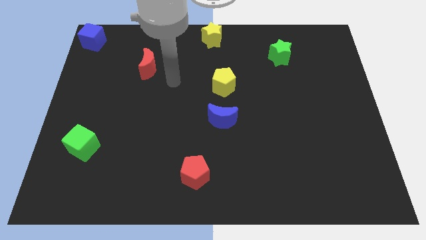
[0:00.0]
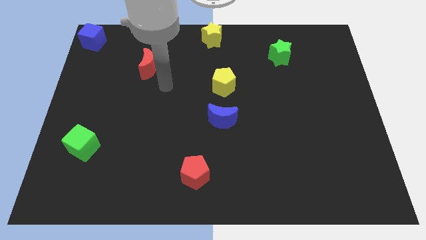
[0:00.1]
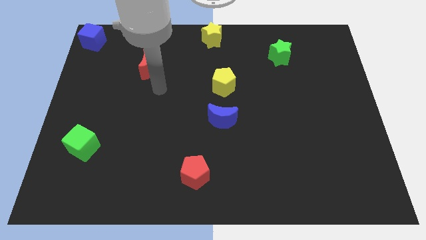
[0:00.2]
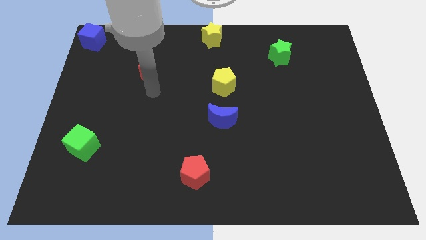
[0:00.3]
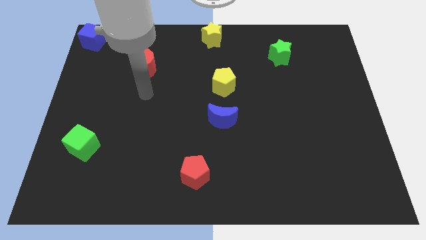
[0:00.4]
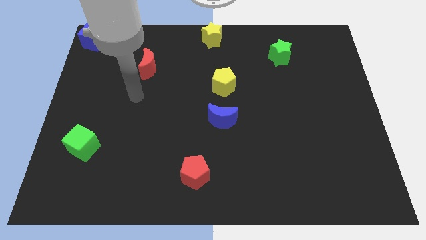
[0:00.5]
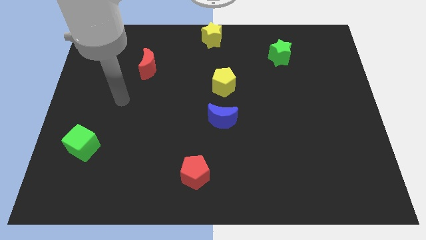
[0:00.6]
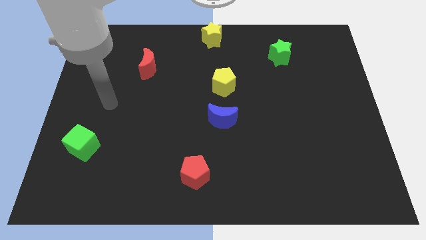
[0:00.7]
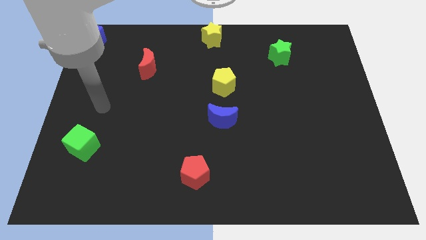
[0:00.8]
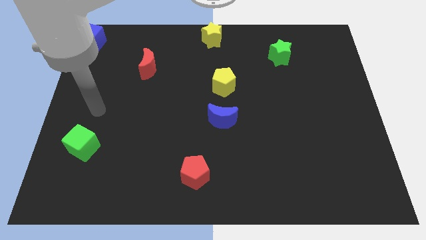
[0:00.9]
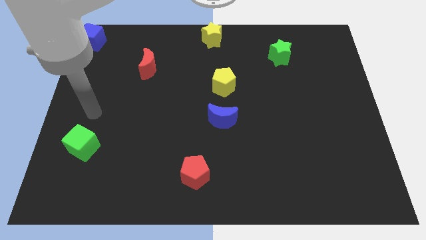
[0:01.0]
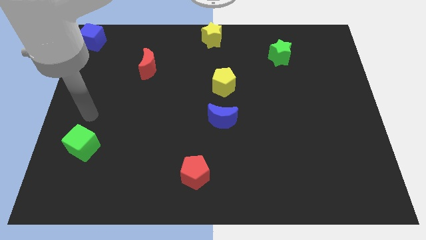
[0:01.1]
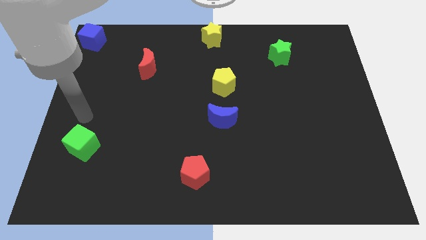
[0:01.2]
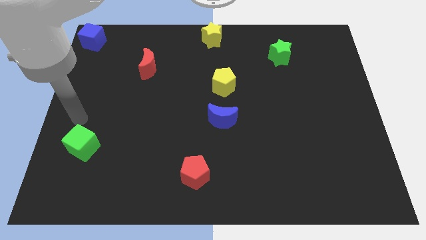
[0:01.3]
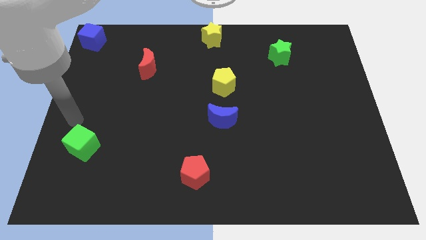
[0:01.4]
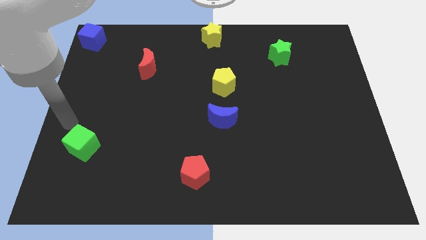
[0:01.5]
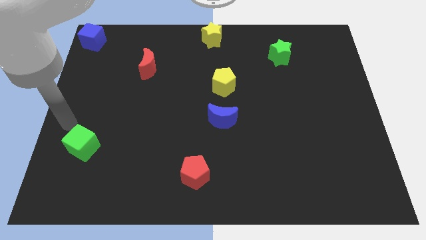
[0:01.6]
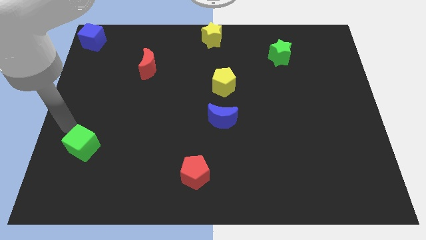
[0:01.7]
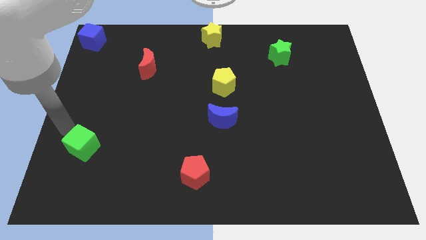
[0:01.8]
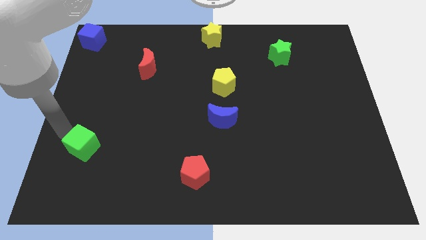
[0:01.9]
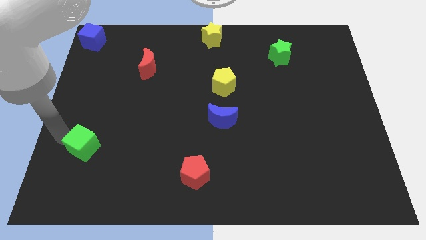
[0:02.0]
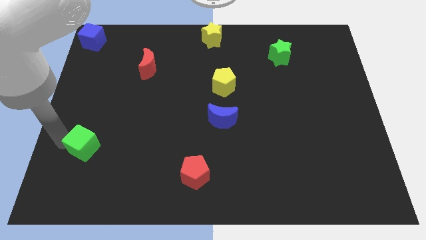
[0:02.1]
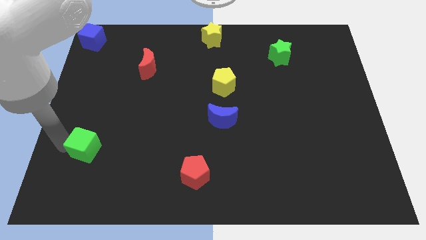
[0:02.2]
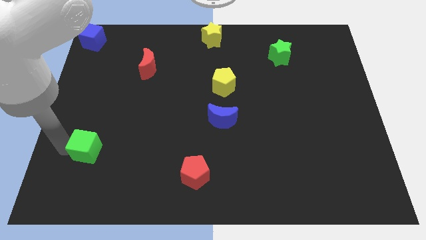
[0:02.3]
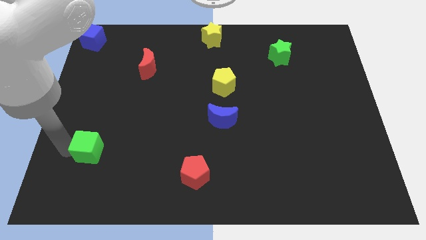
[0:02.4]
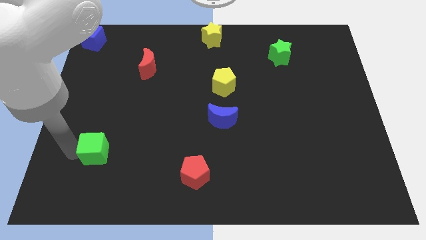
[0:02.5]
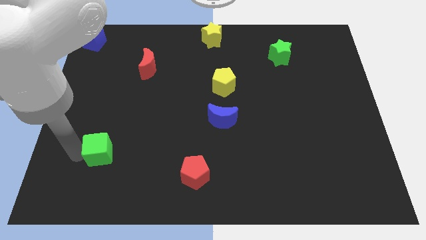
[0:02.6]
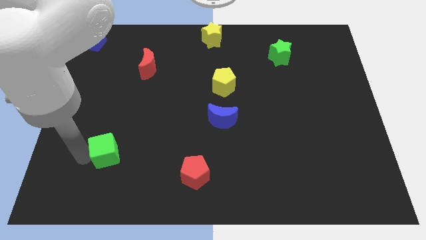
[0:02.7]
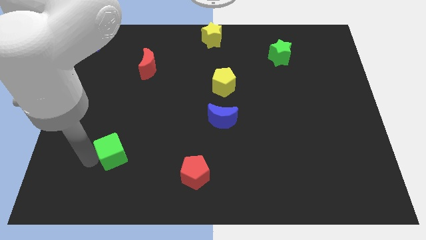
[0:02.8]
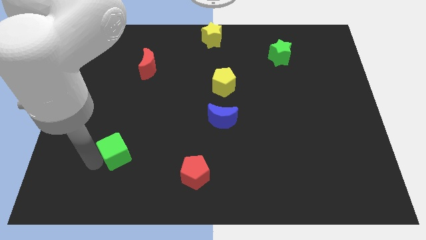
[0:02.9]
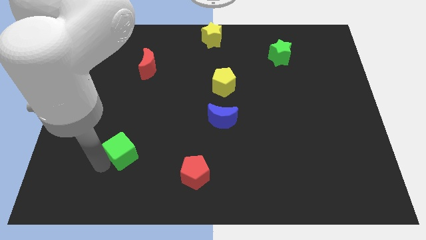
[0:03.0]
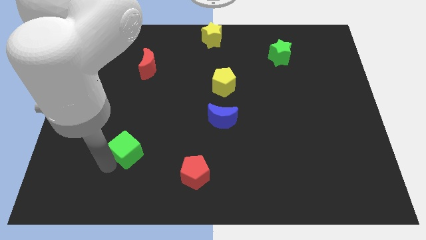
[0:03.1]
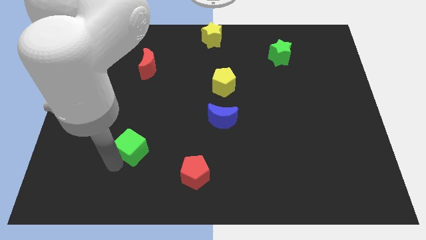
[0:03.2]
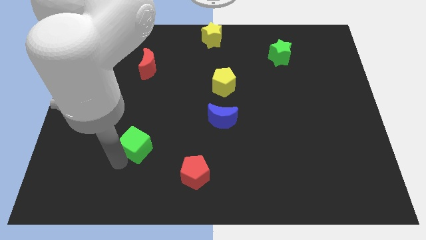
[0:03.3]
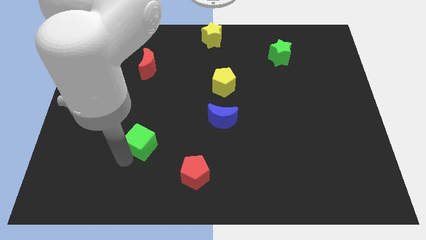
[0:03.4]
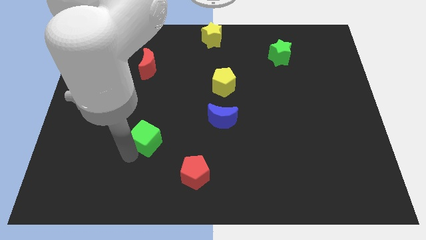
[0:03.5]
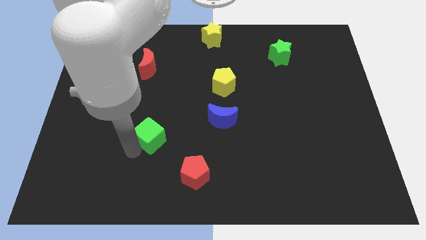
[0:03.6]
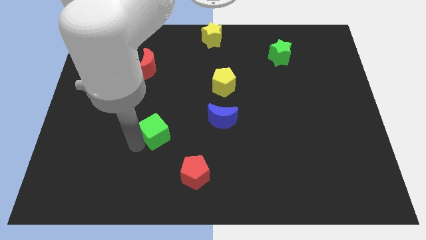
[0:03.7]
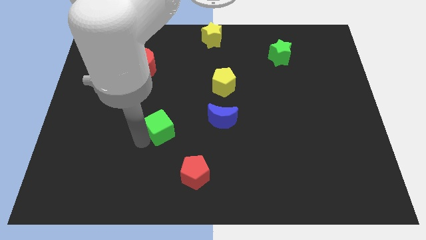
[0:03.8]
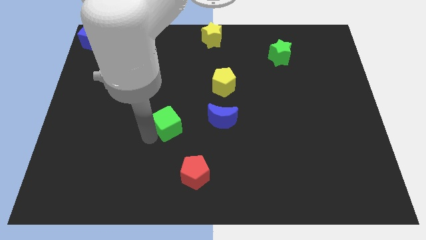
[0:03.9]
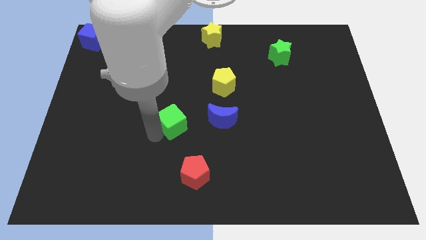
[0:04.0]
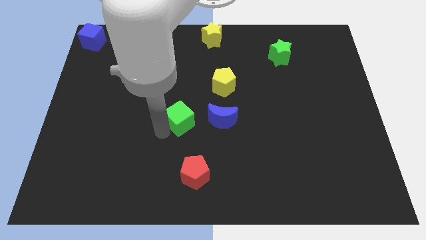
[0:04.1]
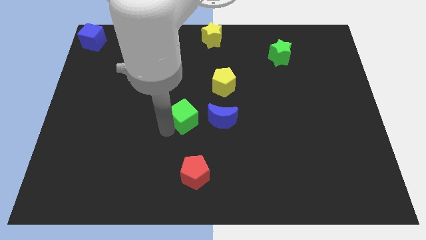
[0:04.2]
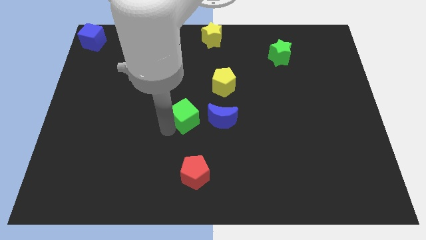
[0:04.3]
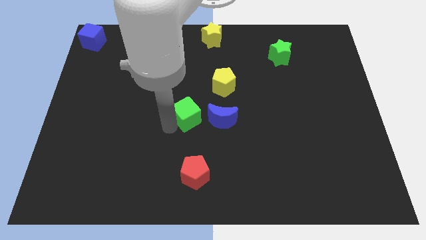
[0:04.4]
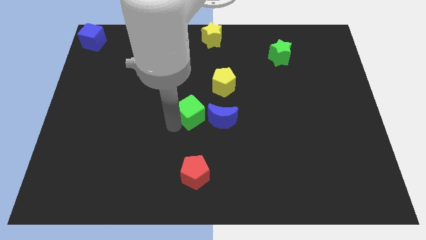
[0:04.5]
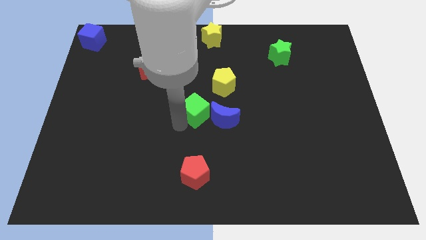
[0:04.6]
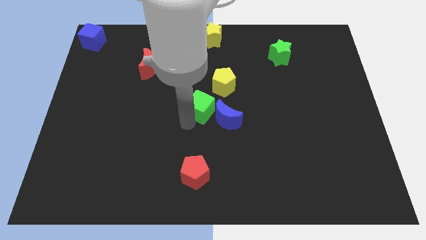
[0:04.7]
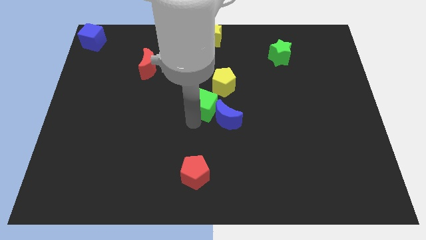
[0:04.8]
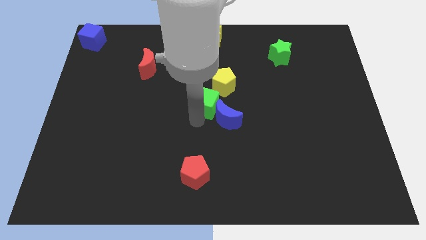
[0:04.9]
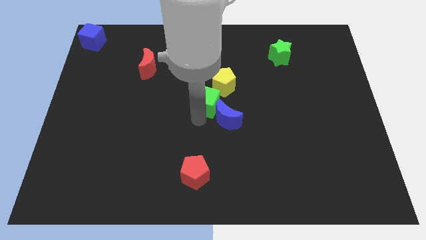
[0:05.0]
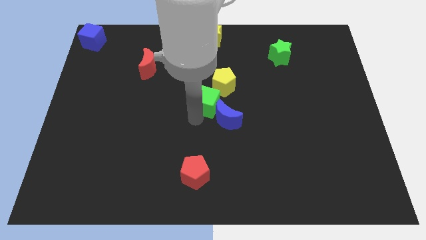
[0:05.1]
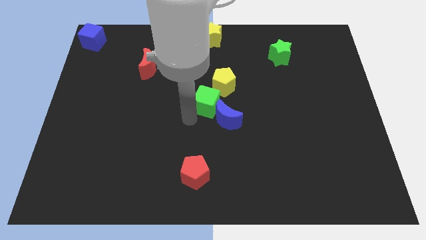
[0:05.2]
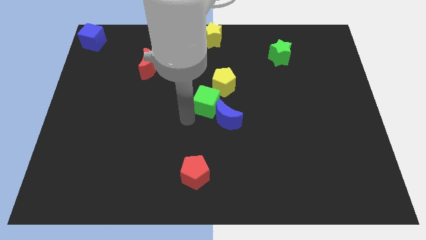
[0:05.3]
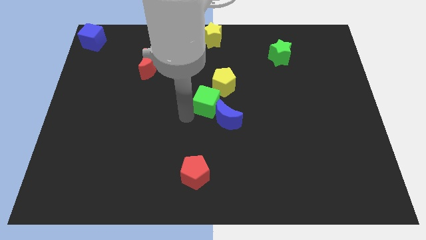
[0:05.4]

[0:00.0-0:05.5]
move the green cube left below the yellow pentagon

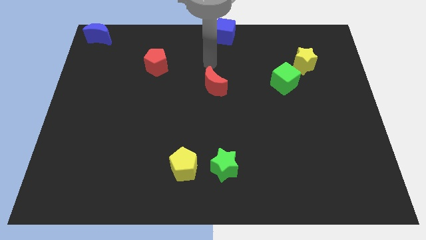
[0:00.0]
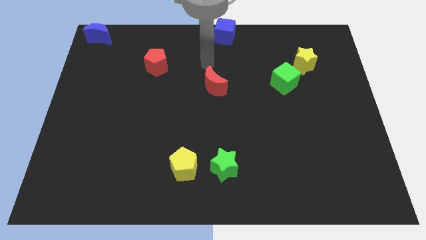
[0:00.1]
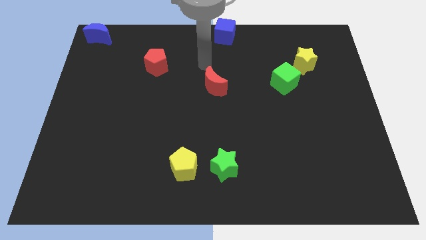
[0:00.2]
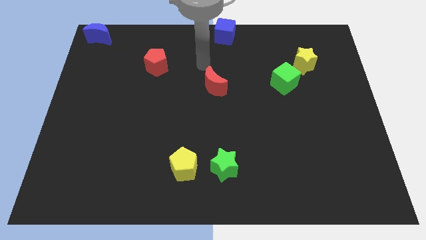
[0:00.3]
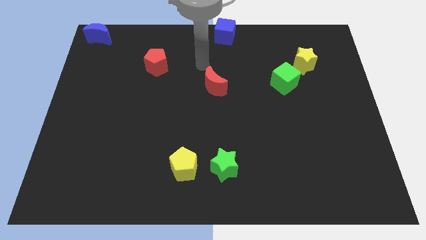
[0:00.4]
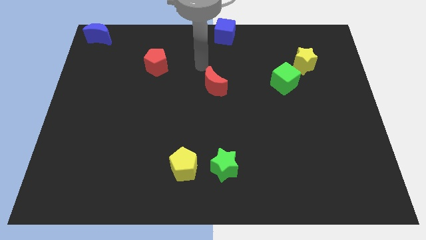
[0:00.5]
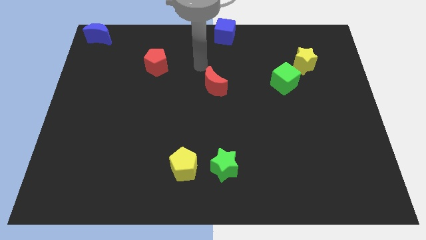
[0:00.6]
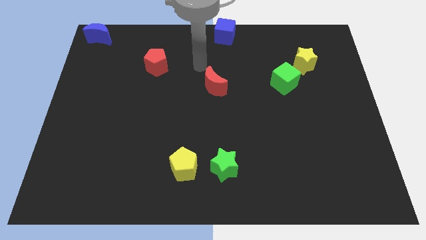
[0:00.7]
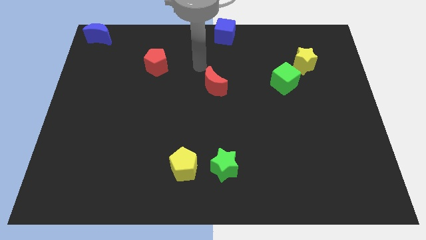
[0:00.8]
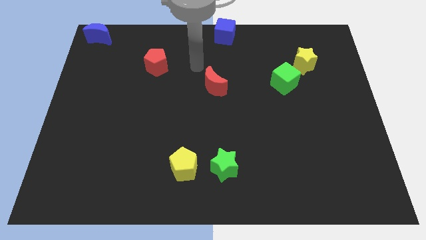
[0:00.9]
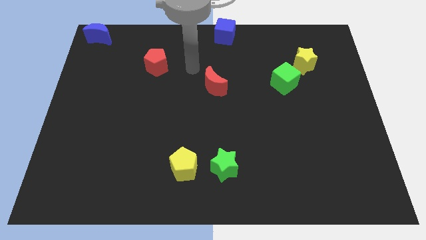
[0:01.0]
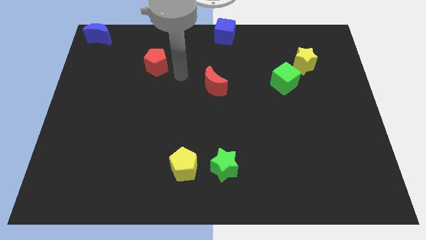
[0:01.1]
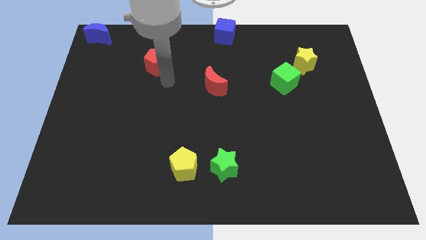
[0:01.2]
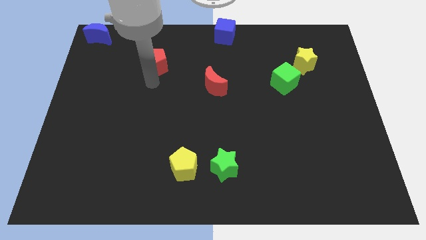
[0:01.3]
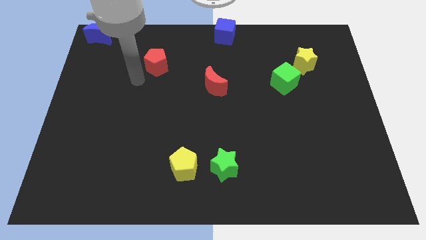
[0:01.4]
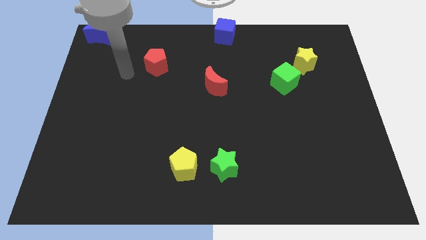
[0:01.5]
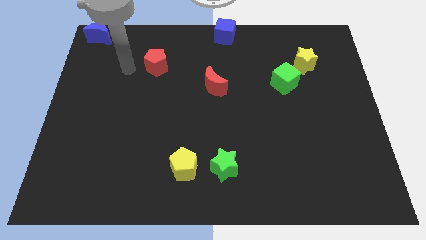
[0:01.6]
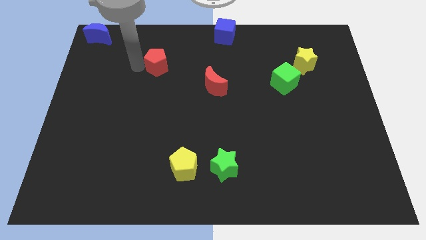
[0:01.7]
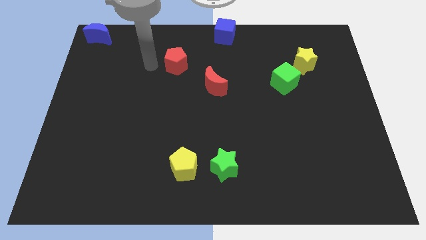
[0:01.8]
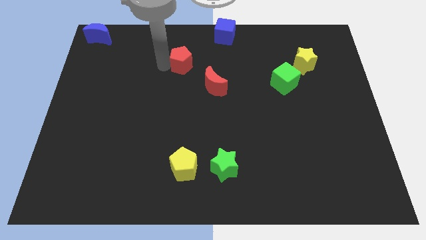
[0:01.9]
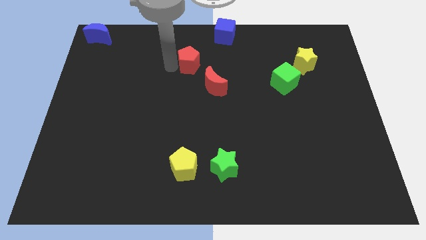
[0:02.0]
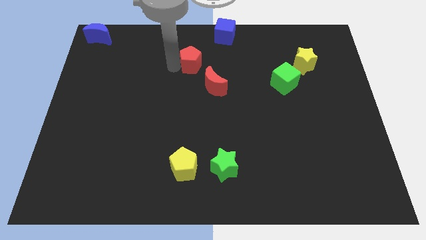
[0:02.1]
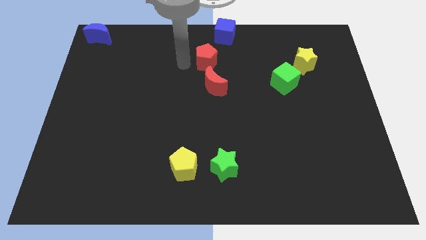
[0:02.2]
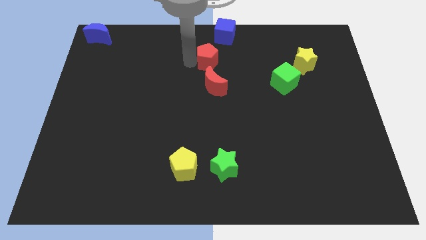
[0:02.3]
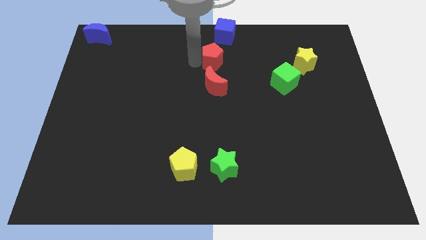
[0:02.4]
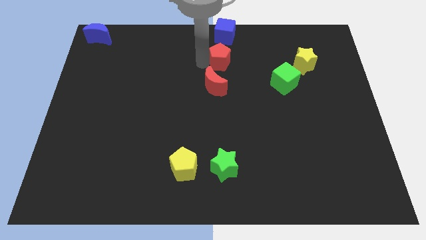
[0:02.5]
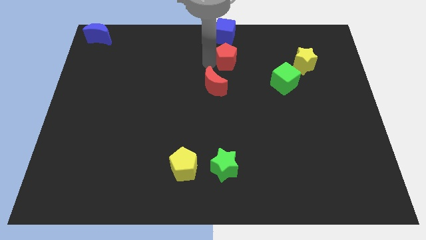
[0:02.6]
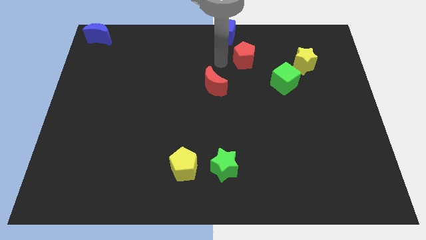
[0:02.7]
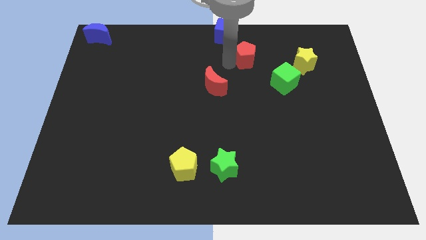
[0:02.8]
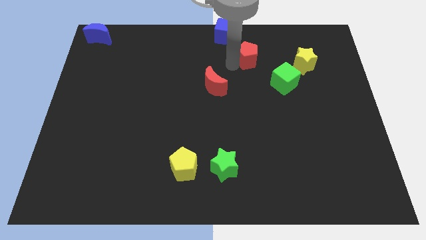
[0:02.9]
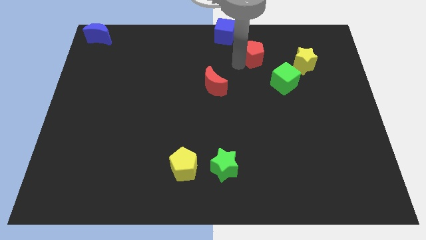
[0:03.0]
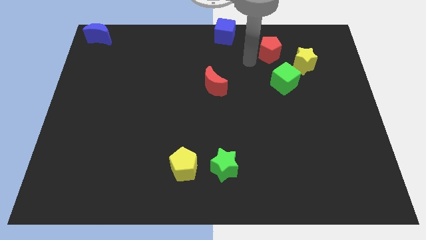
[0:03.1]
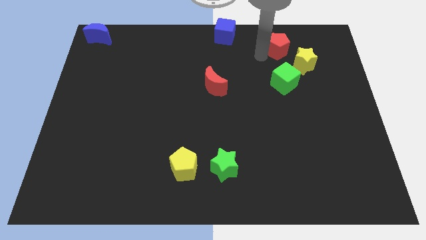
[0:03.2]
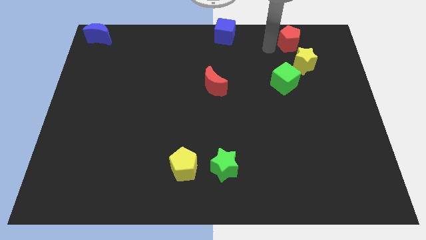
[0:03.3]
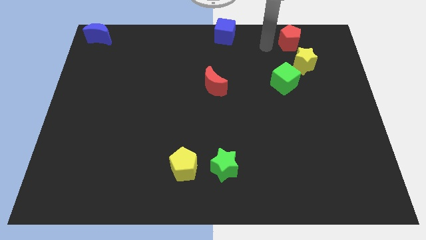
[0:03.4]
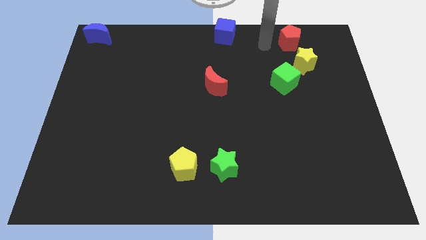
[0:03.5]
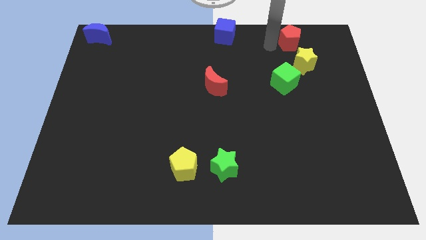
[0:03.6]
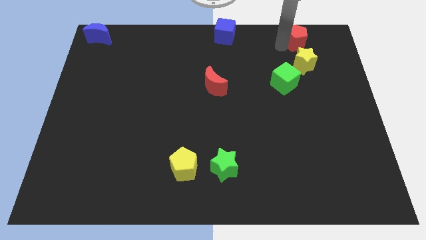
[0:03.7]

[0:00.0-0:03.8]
place the red pentagon right to the blue cube
